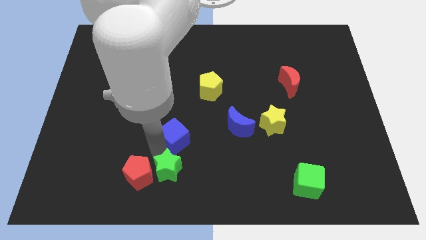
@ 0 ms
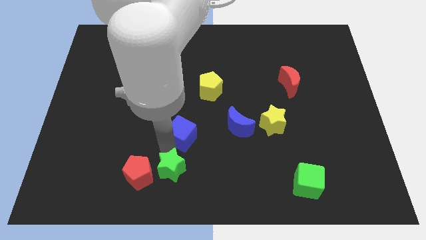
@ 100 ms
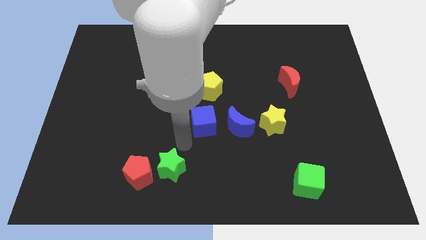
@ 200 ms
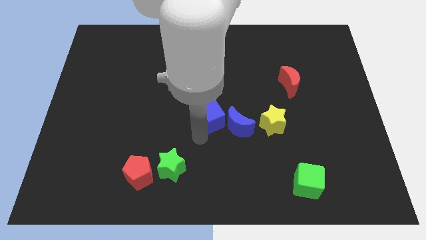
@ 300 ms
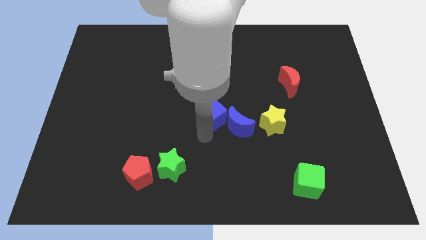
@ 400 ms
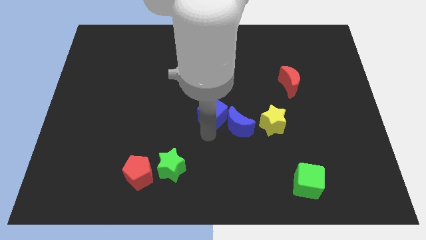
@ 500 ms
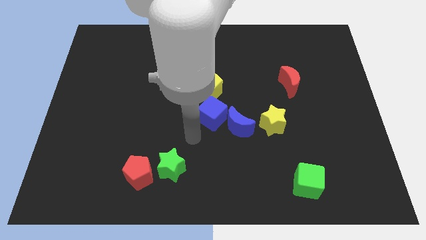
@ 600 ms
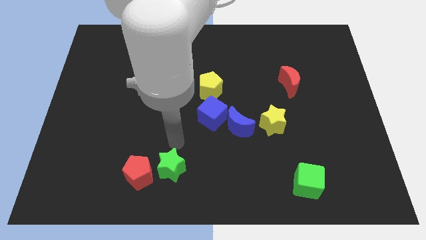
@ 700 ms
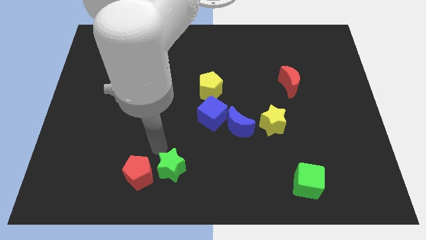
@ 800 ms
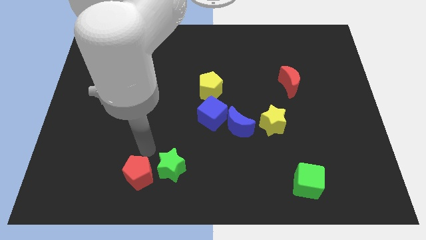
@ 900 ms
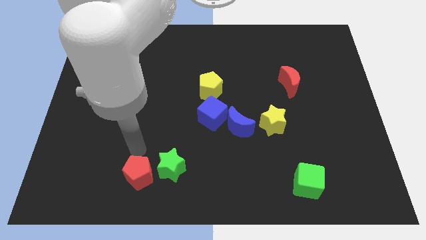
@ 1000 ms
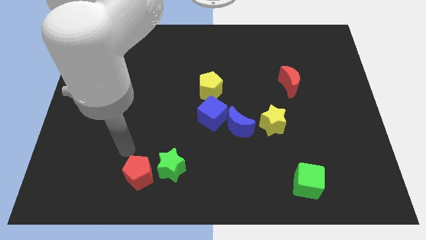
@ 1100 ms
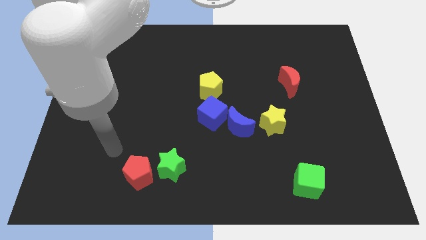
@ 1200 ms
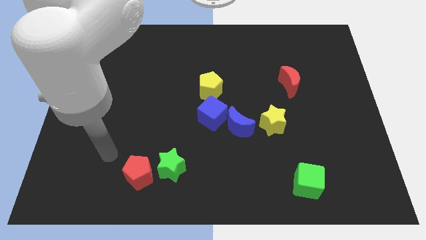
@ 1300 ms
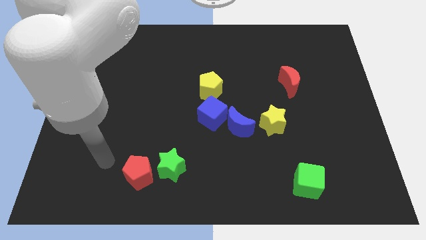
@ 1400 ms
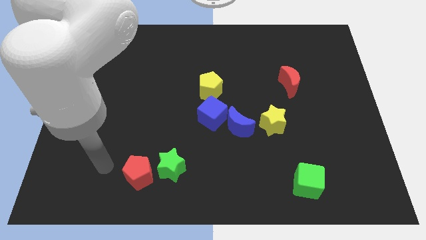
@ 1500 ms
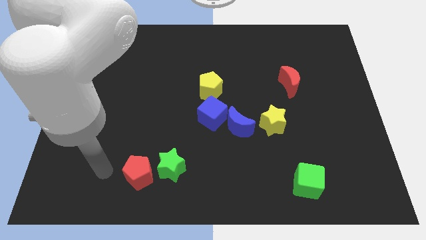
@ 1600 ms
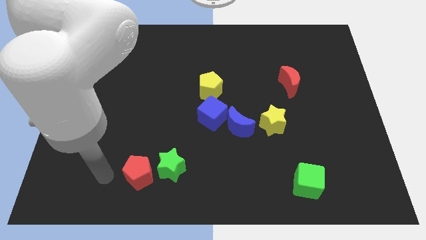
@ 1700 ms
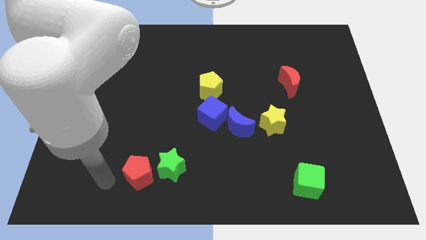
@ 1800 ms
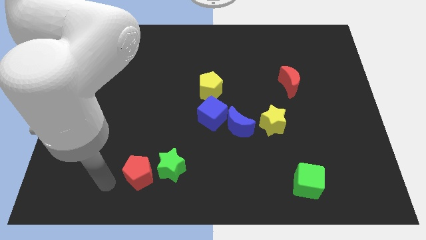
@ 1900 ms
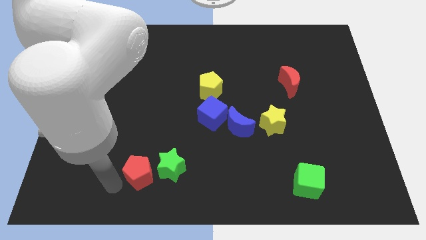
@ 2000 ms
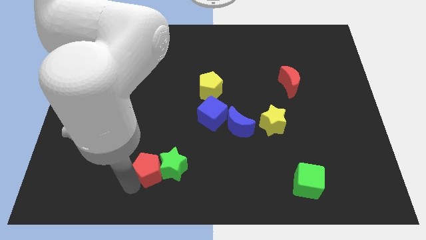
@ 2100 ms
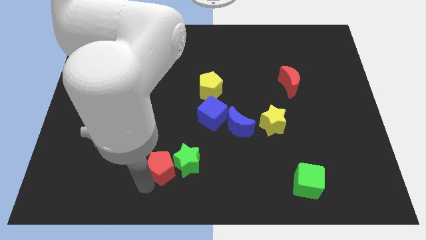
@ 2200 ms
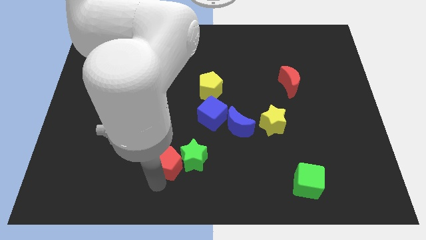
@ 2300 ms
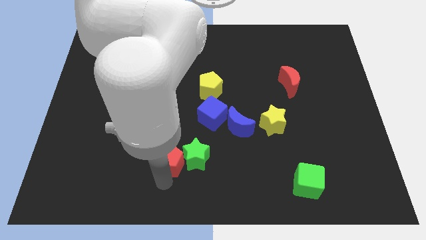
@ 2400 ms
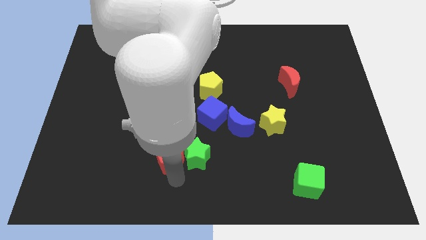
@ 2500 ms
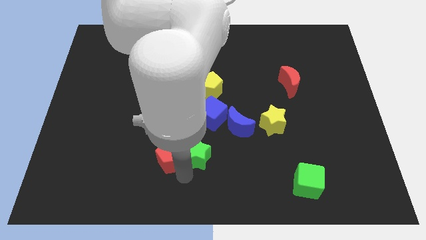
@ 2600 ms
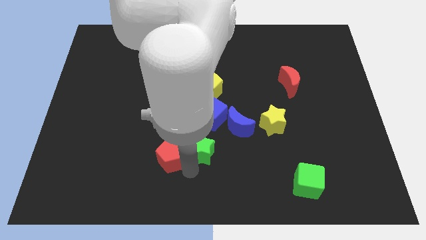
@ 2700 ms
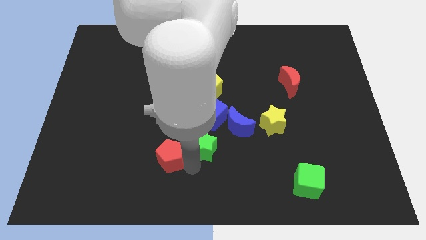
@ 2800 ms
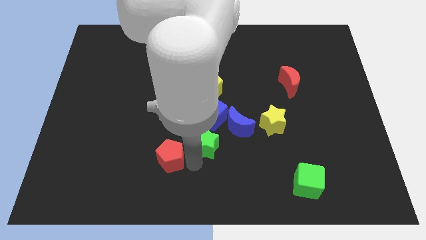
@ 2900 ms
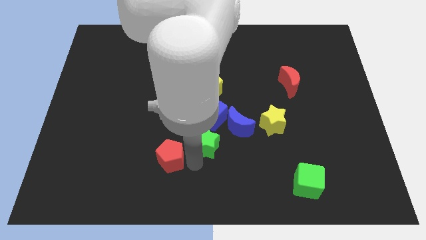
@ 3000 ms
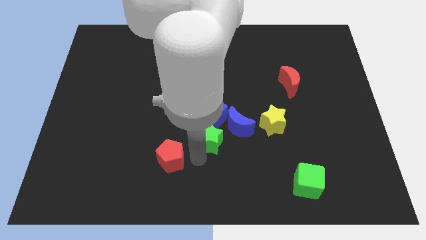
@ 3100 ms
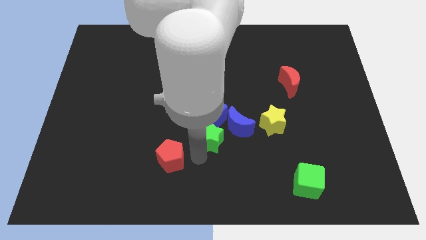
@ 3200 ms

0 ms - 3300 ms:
push green star below blue cube

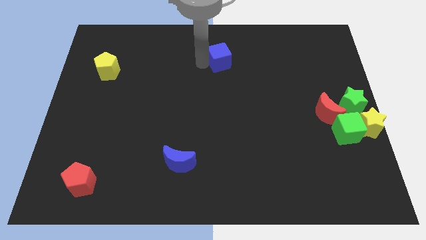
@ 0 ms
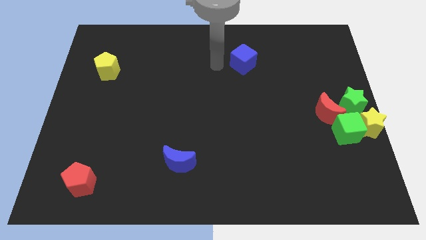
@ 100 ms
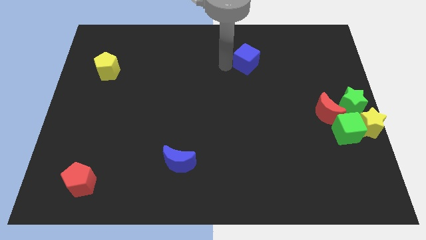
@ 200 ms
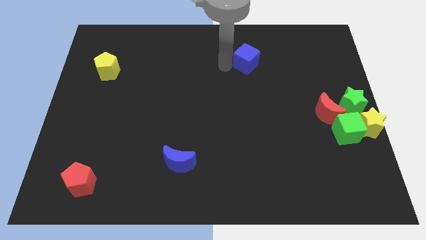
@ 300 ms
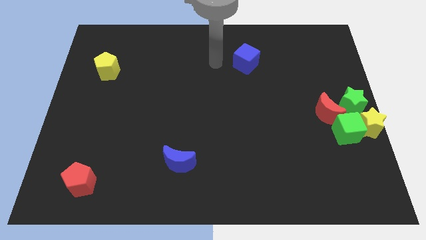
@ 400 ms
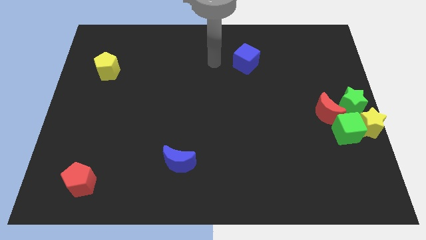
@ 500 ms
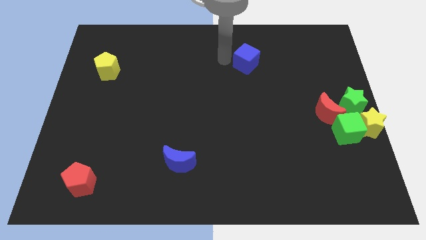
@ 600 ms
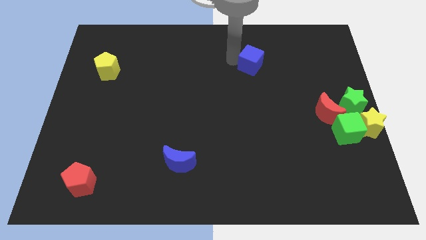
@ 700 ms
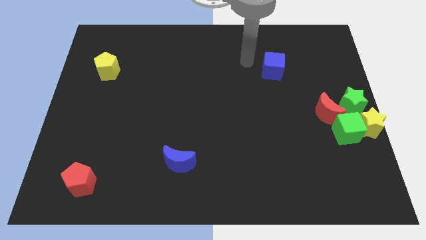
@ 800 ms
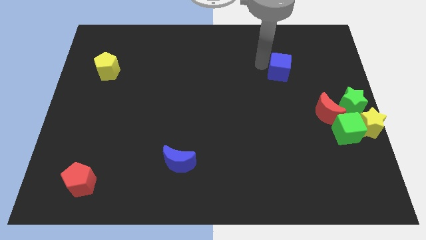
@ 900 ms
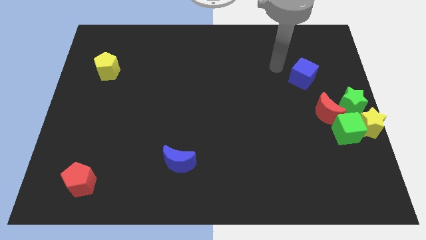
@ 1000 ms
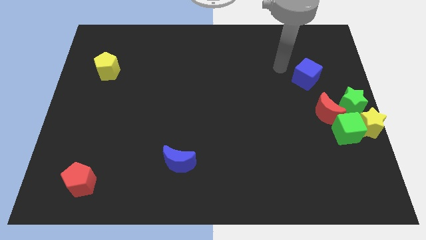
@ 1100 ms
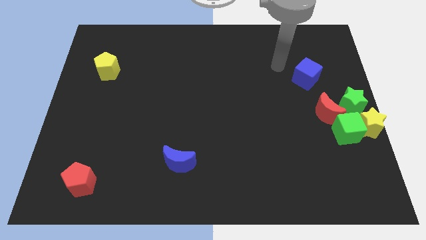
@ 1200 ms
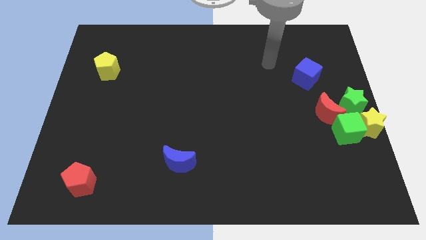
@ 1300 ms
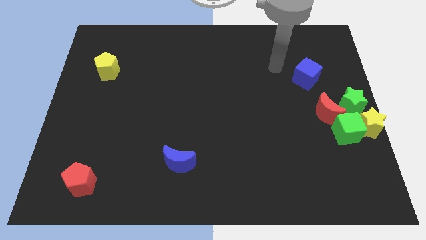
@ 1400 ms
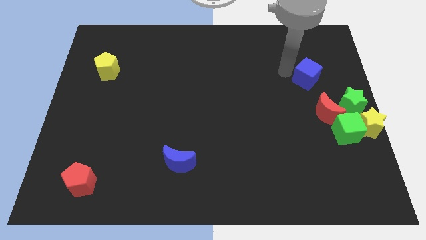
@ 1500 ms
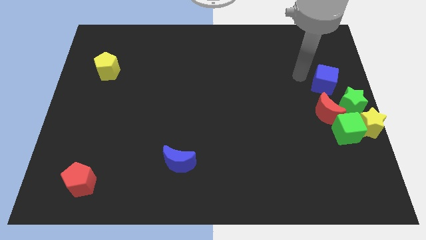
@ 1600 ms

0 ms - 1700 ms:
push the blue cube towards the green star

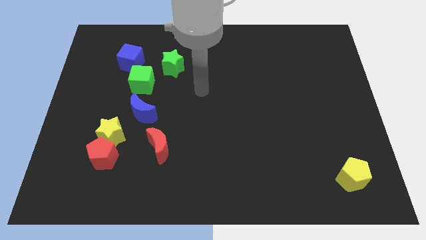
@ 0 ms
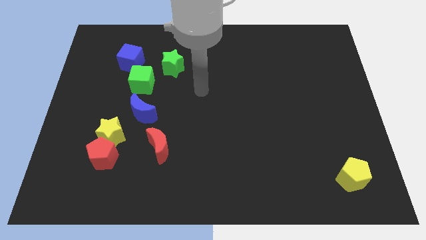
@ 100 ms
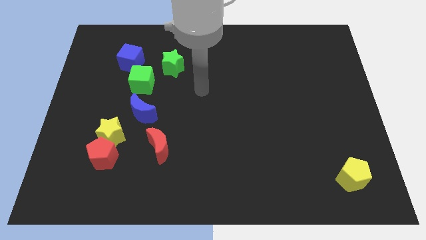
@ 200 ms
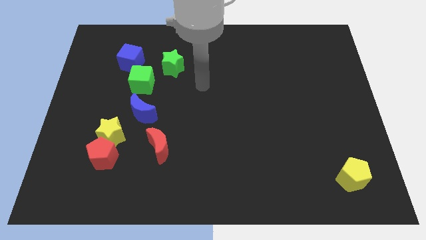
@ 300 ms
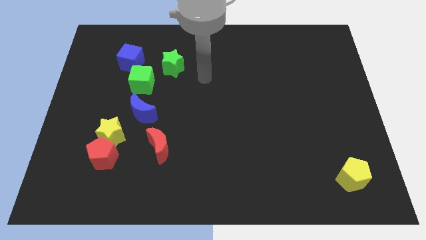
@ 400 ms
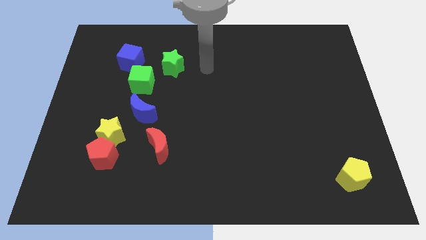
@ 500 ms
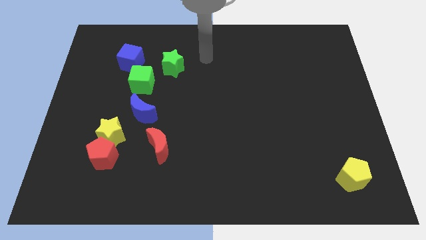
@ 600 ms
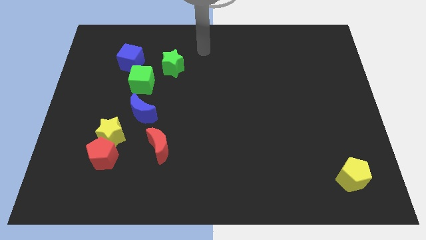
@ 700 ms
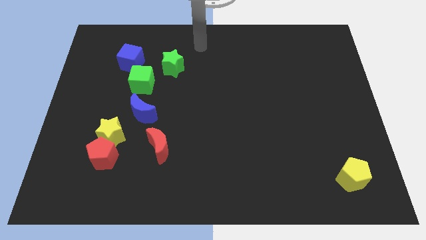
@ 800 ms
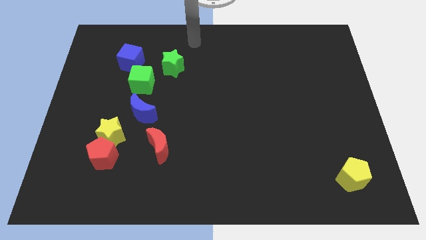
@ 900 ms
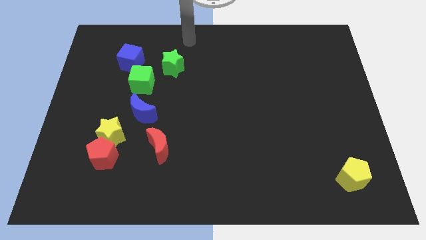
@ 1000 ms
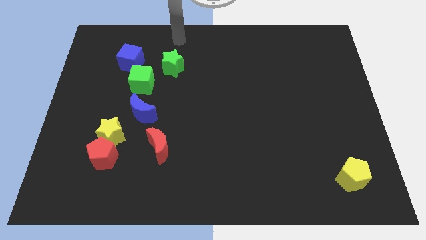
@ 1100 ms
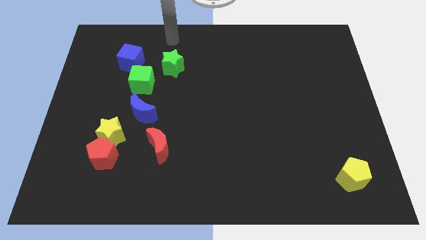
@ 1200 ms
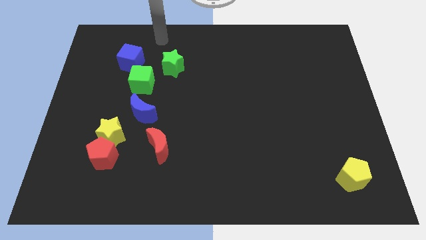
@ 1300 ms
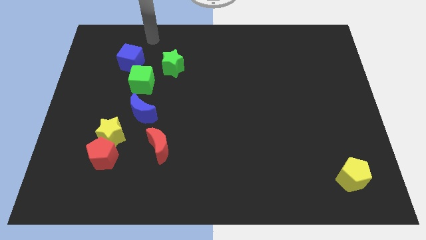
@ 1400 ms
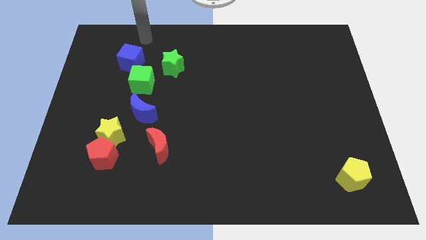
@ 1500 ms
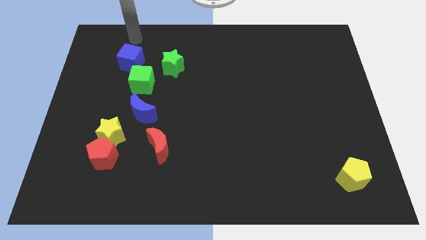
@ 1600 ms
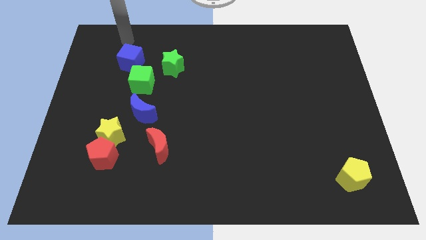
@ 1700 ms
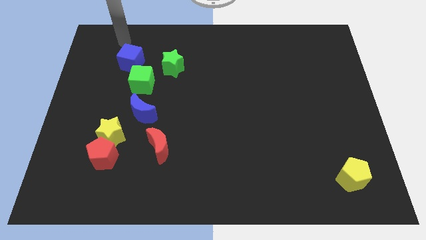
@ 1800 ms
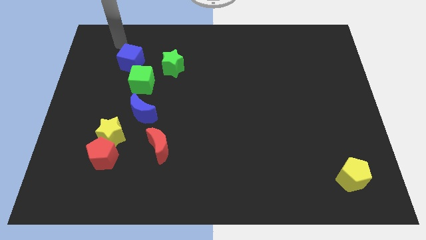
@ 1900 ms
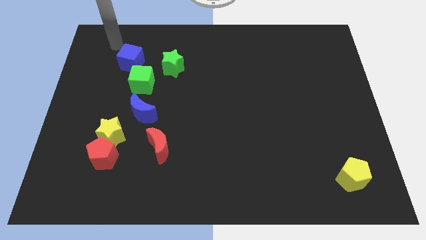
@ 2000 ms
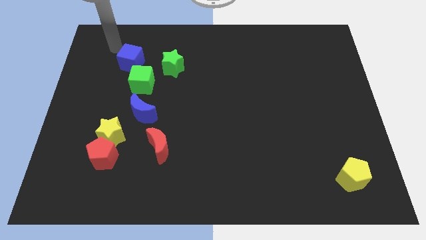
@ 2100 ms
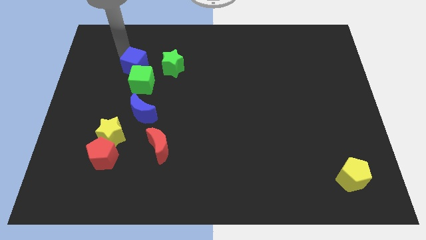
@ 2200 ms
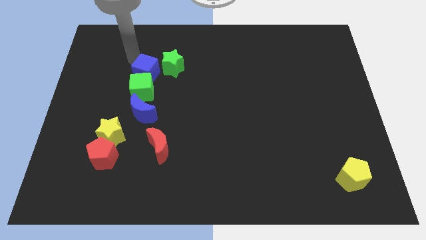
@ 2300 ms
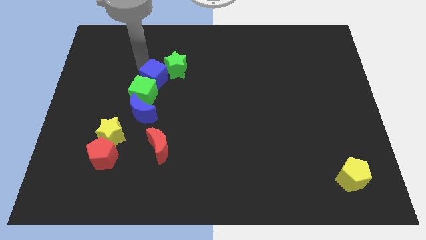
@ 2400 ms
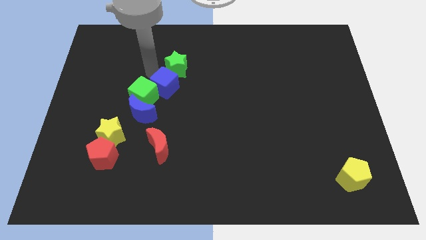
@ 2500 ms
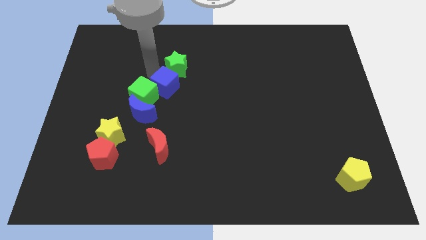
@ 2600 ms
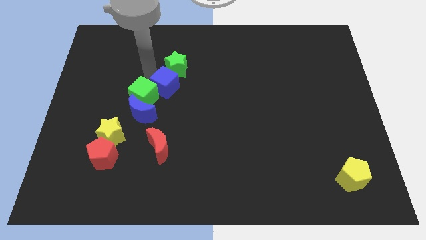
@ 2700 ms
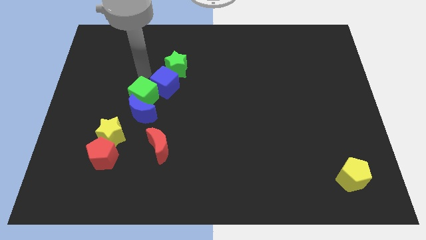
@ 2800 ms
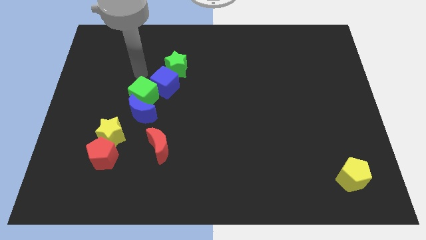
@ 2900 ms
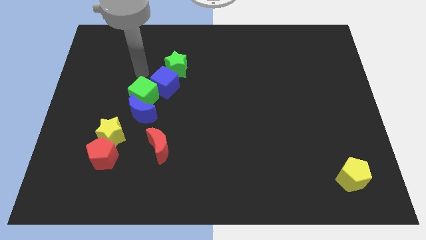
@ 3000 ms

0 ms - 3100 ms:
place the blue cube to the bottom of the green star

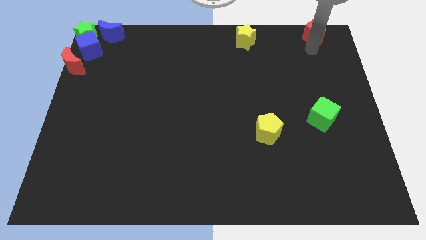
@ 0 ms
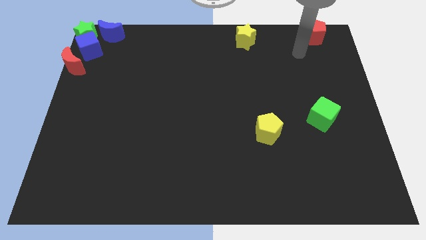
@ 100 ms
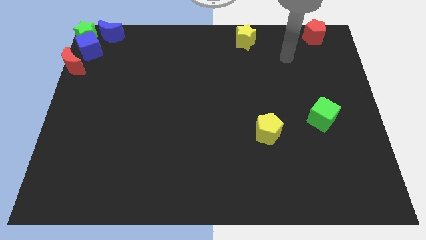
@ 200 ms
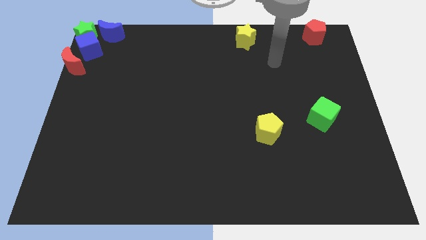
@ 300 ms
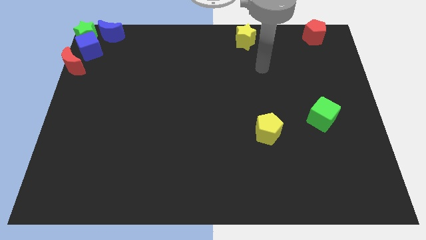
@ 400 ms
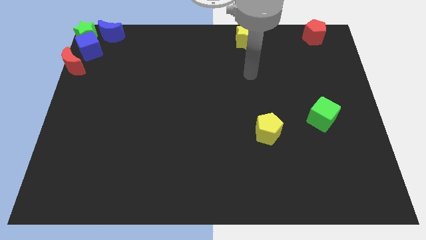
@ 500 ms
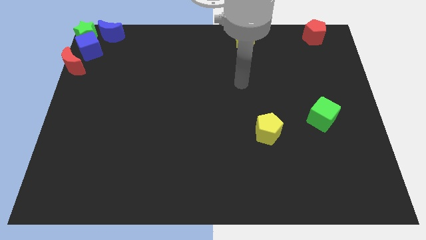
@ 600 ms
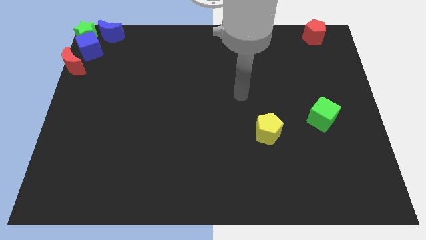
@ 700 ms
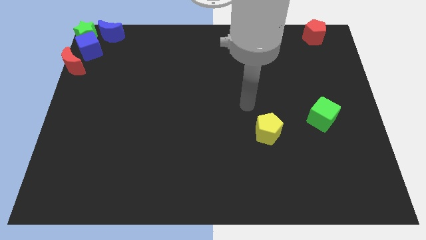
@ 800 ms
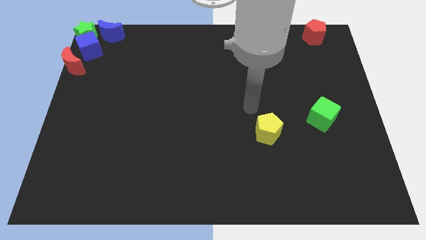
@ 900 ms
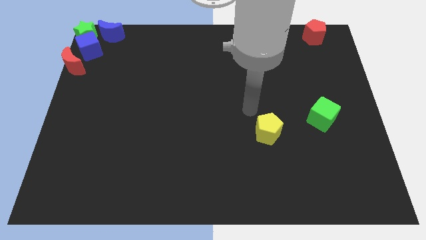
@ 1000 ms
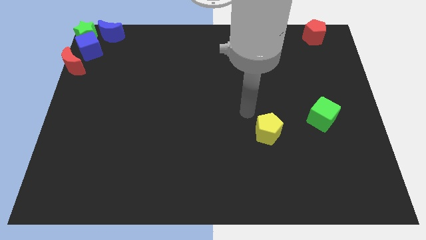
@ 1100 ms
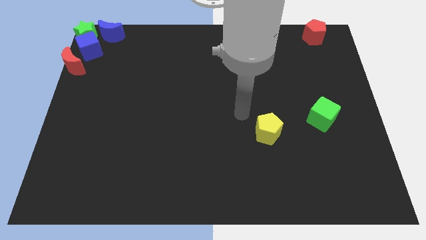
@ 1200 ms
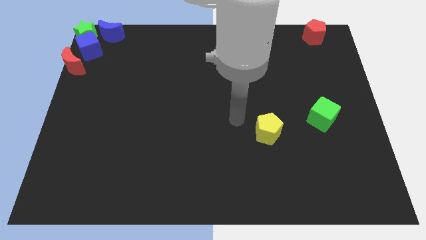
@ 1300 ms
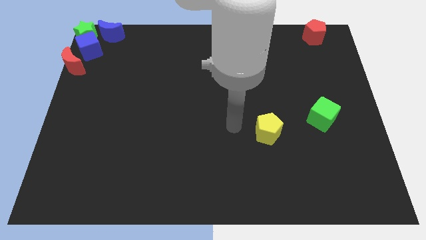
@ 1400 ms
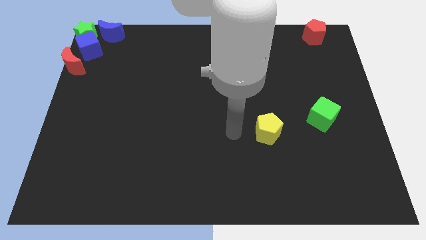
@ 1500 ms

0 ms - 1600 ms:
point your arm at the left of the yellow pentagon
